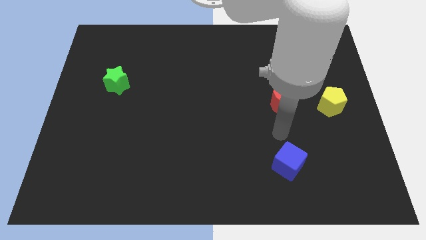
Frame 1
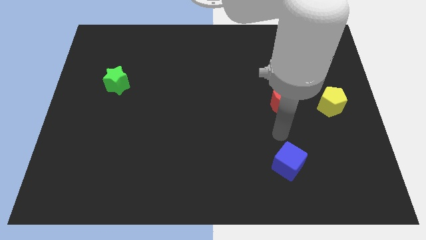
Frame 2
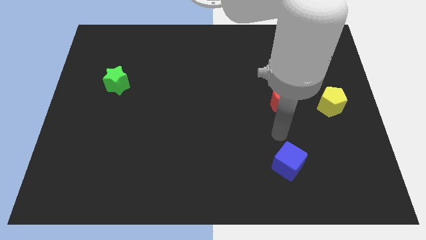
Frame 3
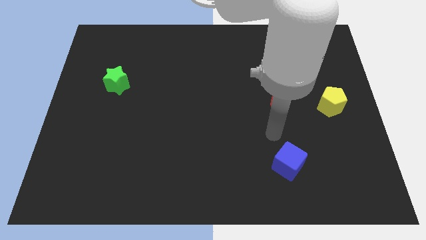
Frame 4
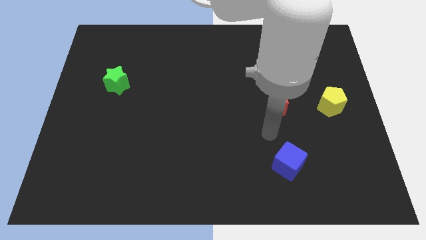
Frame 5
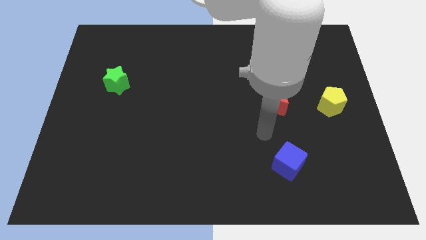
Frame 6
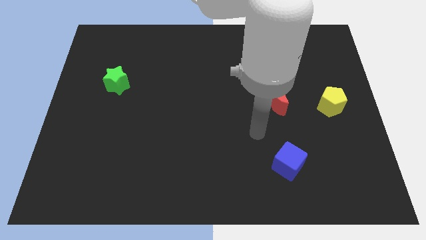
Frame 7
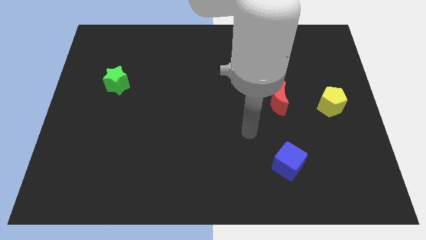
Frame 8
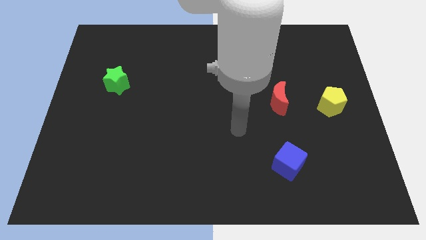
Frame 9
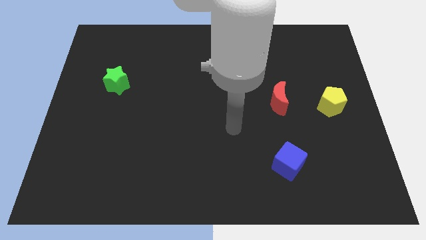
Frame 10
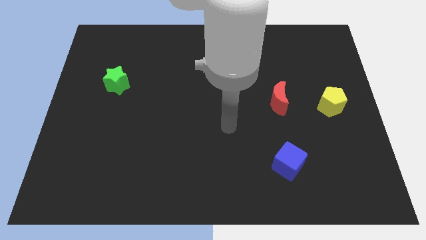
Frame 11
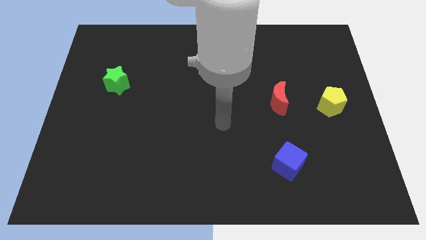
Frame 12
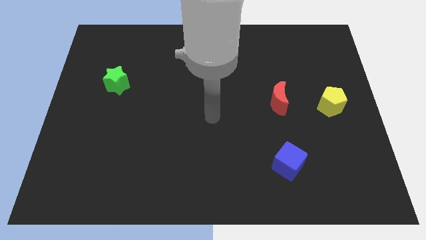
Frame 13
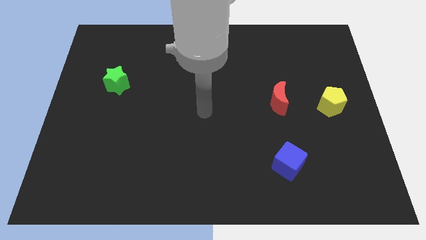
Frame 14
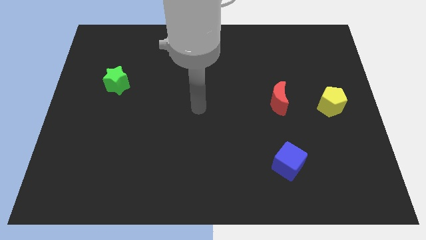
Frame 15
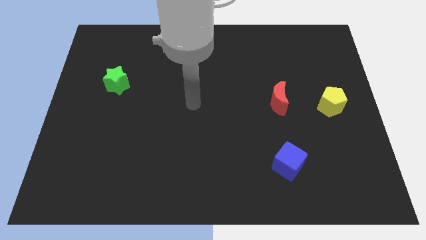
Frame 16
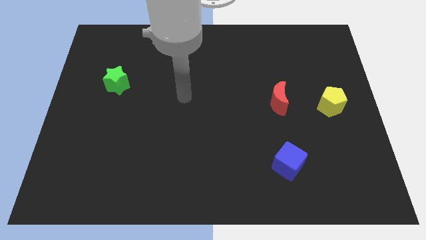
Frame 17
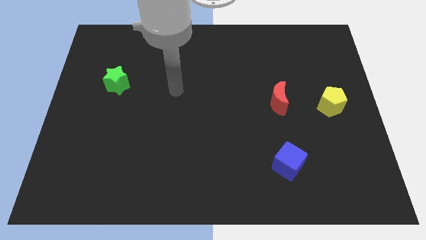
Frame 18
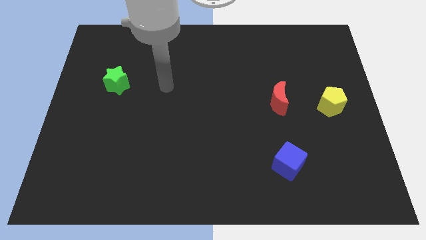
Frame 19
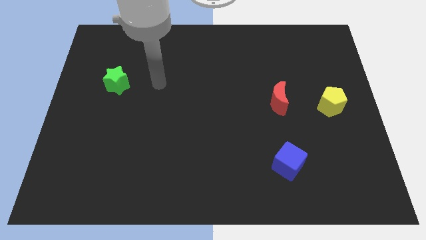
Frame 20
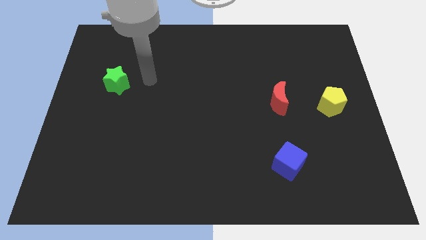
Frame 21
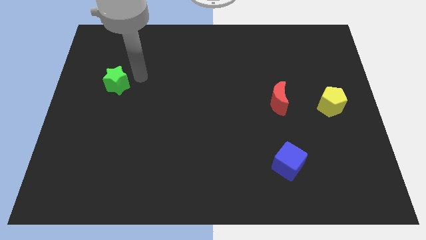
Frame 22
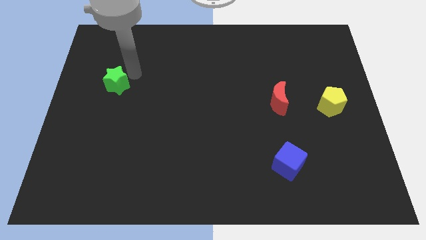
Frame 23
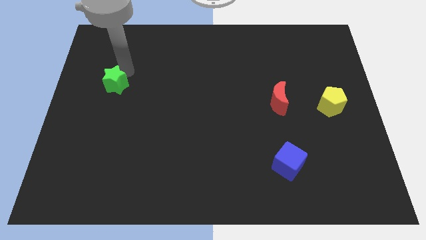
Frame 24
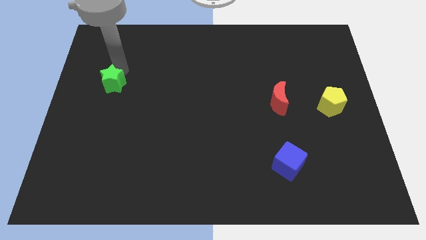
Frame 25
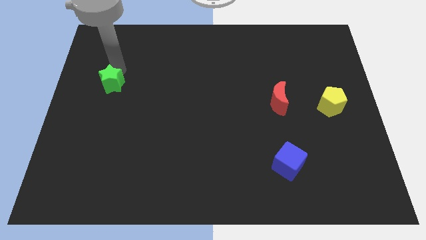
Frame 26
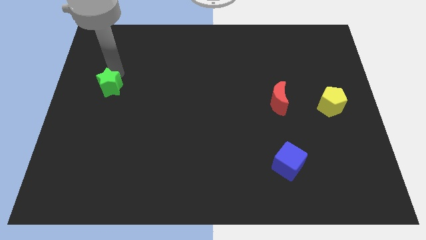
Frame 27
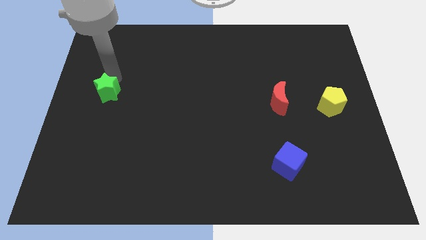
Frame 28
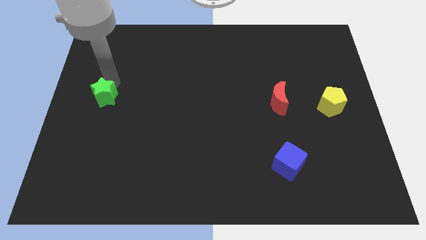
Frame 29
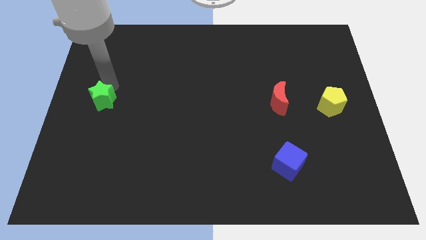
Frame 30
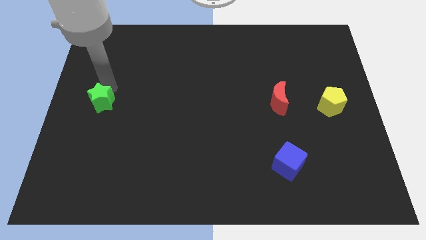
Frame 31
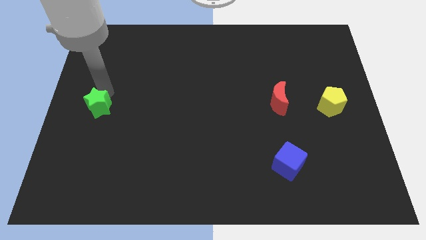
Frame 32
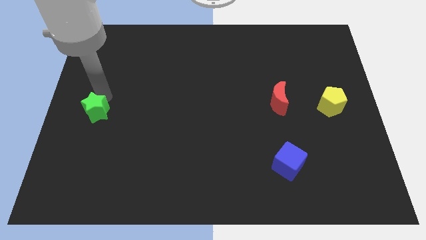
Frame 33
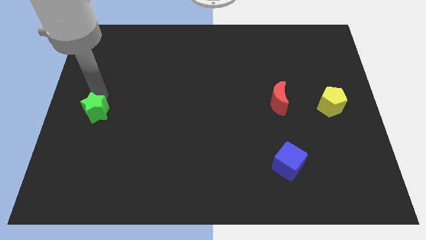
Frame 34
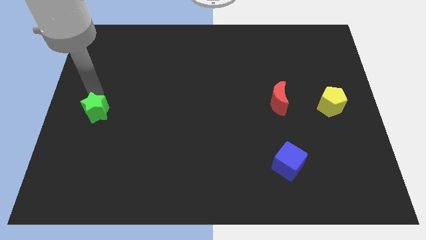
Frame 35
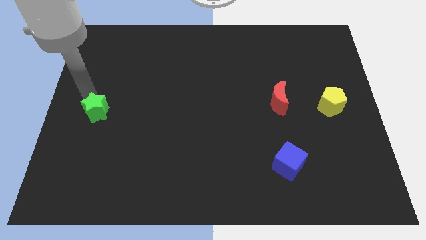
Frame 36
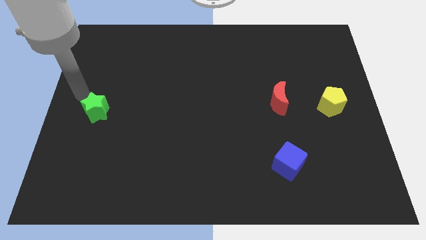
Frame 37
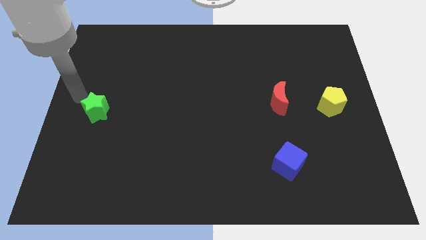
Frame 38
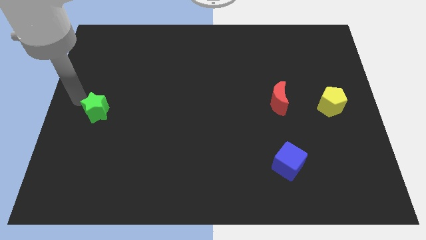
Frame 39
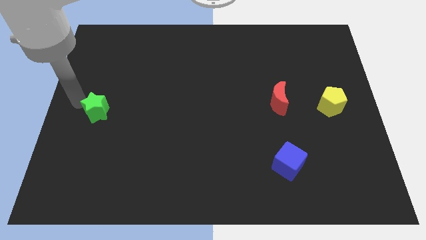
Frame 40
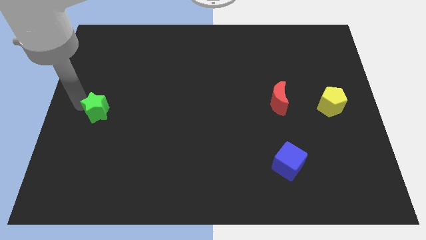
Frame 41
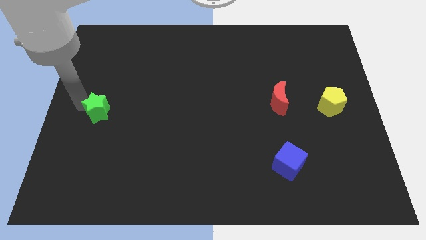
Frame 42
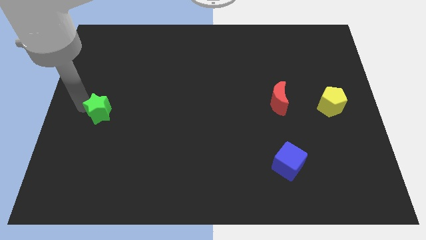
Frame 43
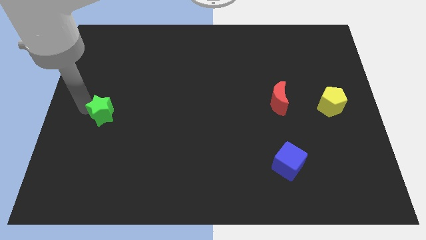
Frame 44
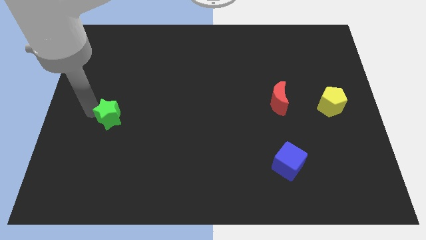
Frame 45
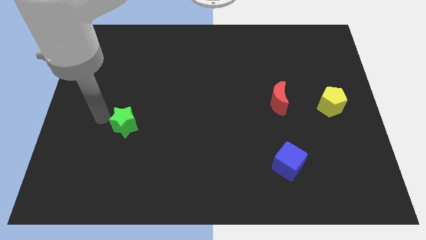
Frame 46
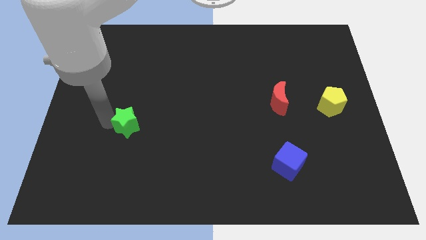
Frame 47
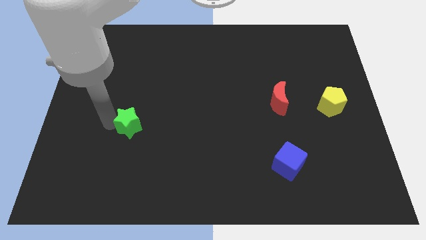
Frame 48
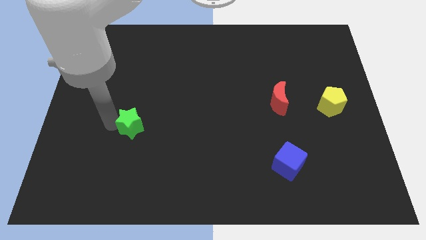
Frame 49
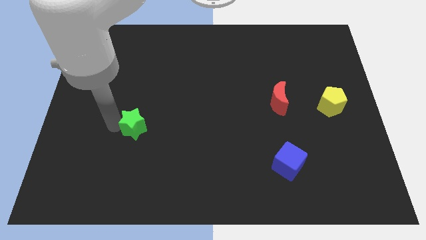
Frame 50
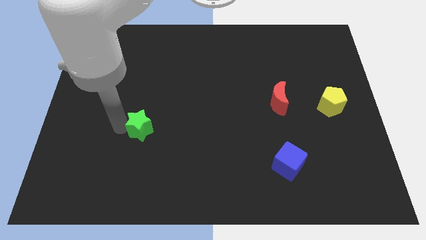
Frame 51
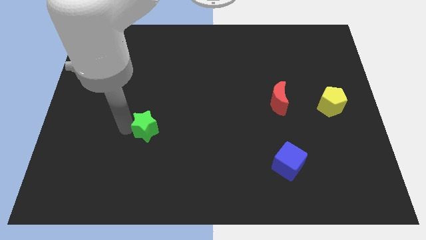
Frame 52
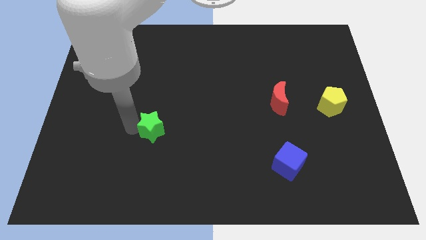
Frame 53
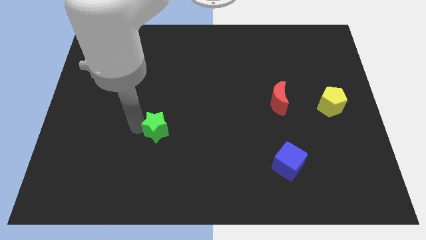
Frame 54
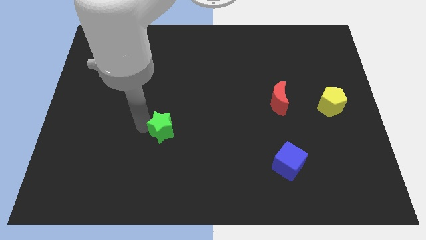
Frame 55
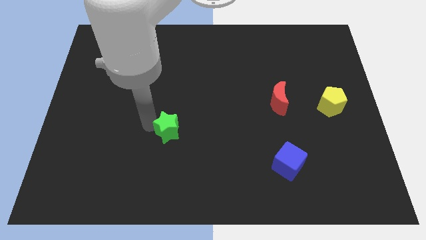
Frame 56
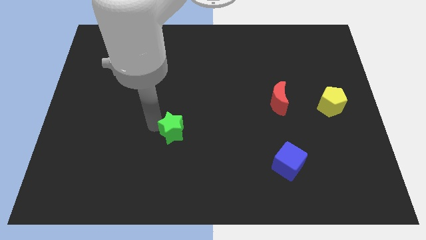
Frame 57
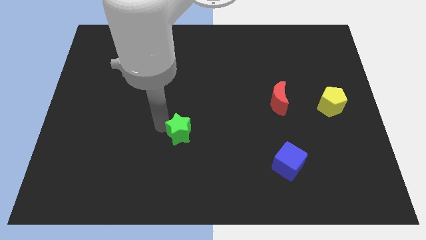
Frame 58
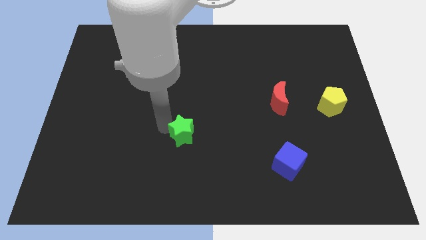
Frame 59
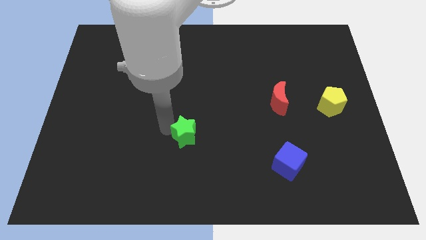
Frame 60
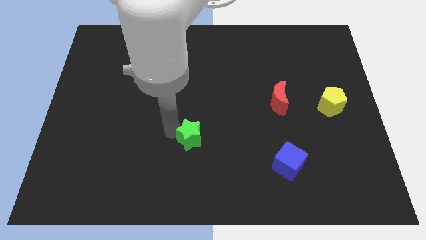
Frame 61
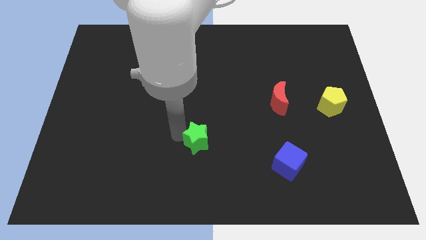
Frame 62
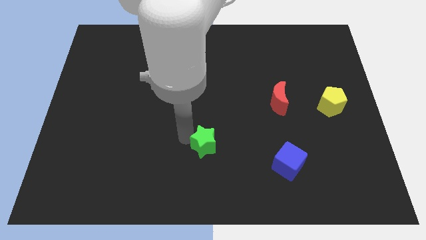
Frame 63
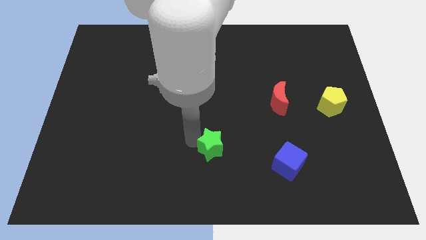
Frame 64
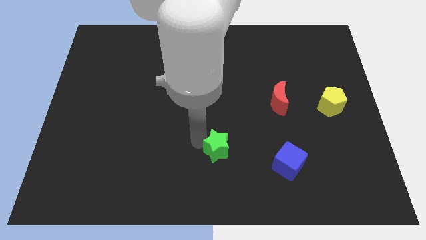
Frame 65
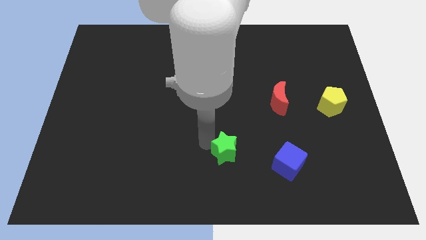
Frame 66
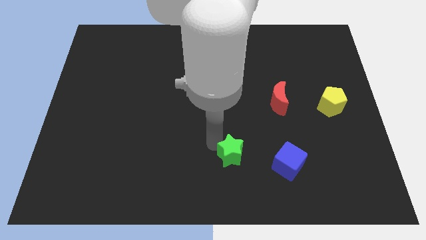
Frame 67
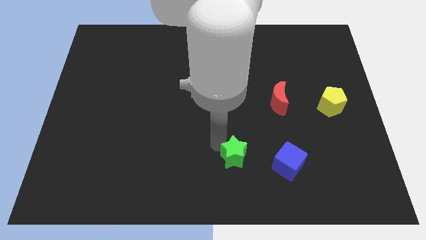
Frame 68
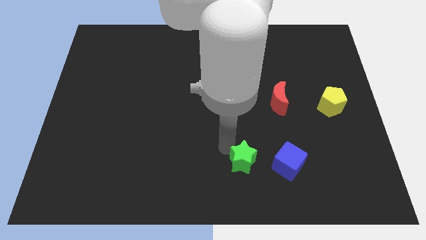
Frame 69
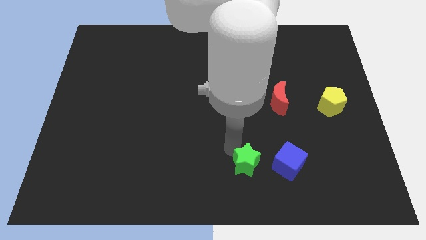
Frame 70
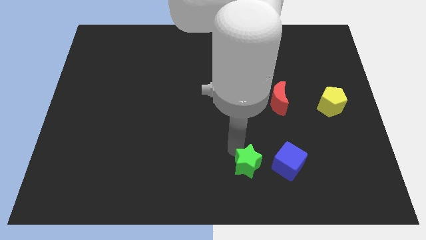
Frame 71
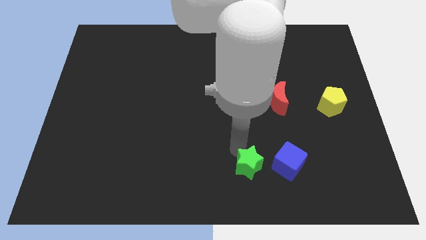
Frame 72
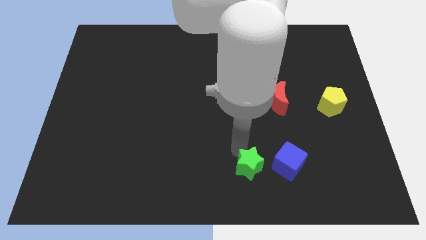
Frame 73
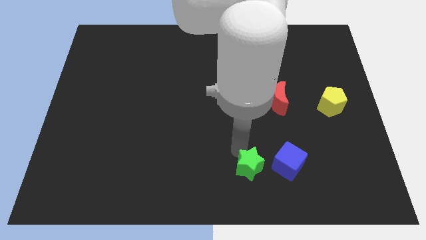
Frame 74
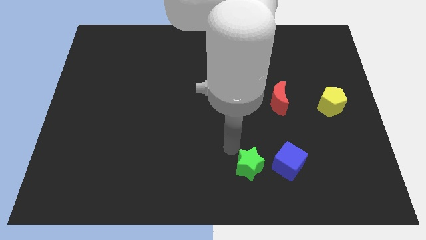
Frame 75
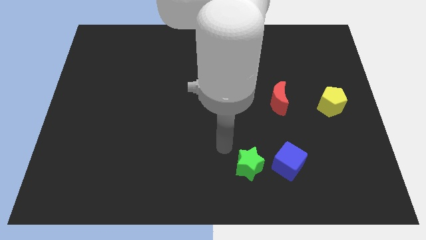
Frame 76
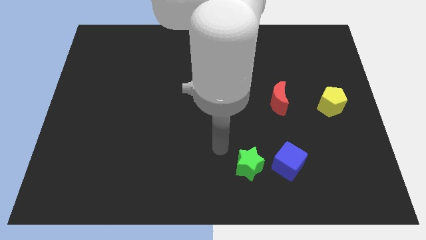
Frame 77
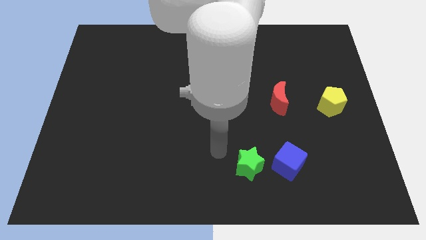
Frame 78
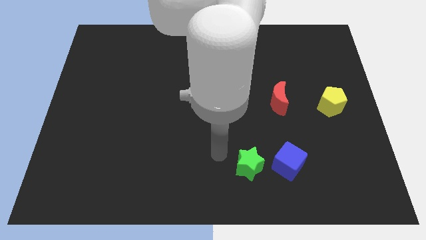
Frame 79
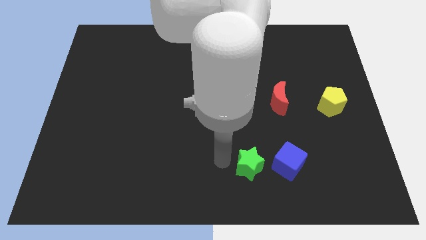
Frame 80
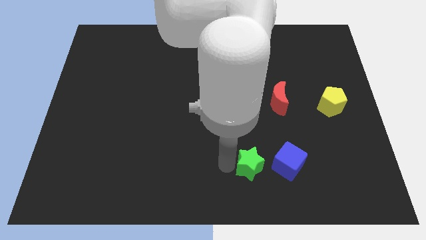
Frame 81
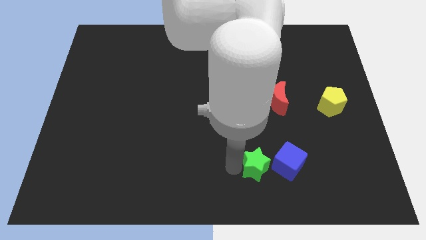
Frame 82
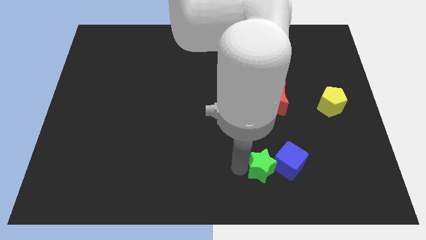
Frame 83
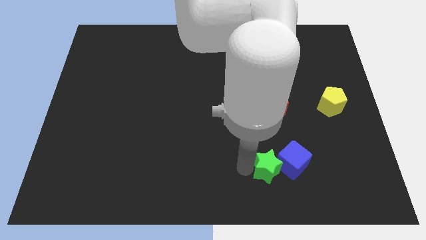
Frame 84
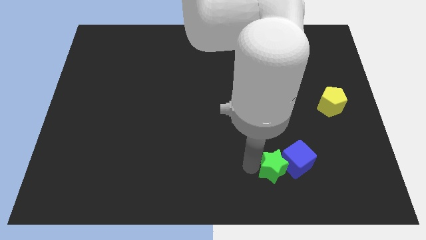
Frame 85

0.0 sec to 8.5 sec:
slide the green block towards the blue block
